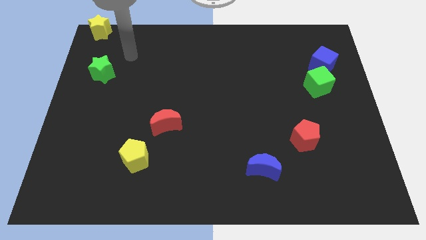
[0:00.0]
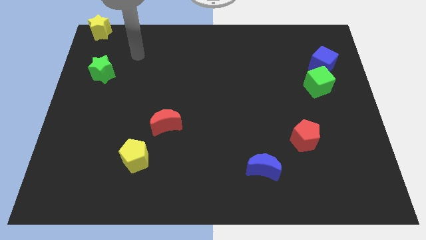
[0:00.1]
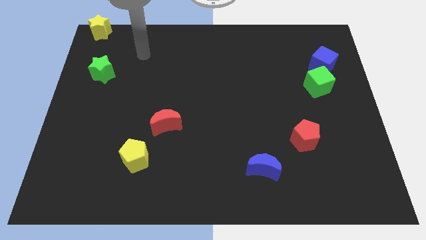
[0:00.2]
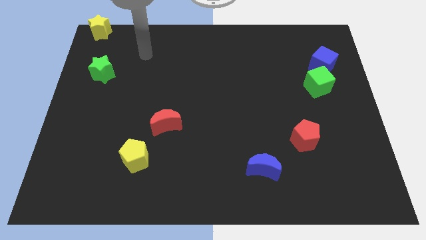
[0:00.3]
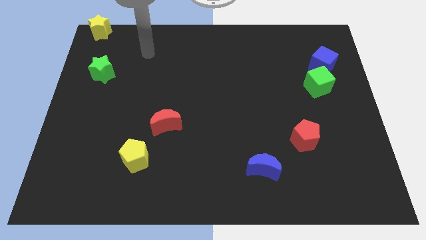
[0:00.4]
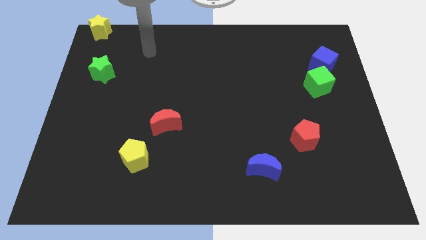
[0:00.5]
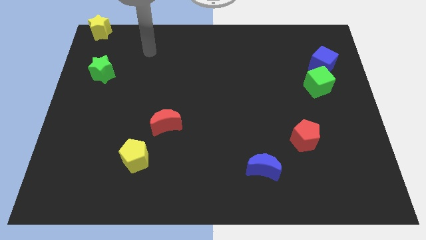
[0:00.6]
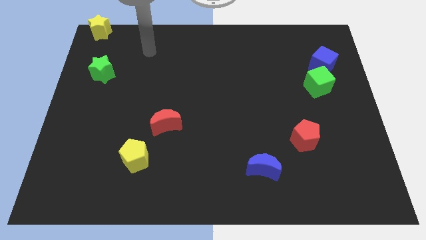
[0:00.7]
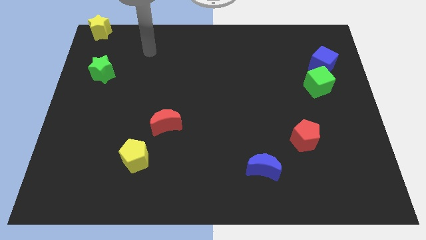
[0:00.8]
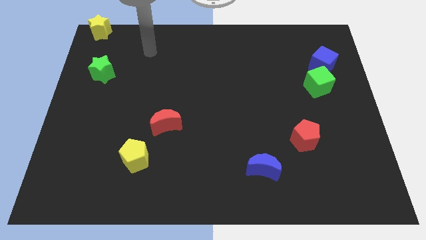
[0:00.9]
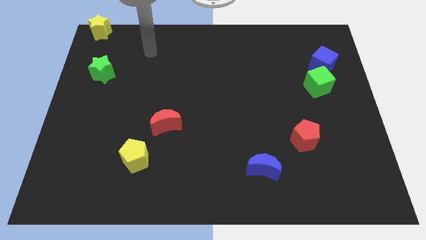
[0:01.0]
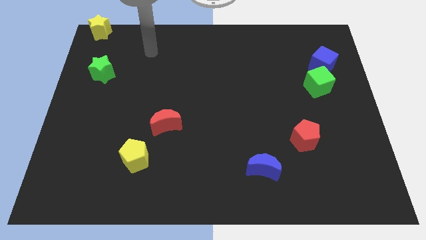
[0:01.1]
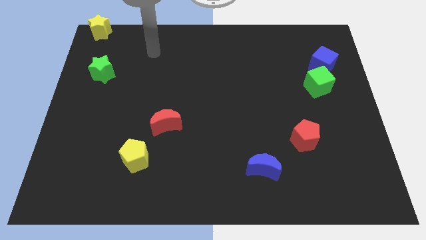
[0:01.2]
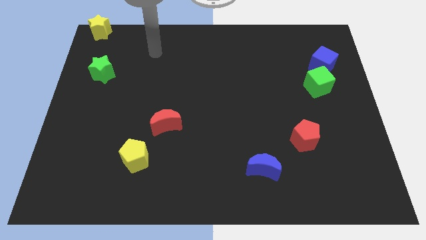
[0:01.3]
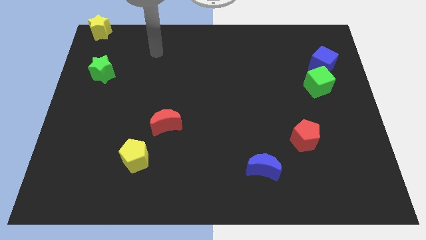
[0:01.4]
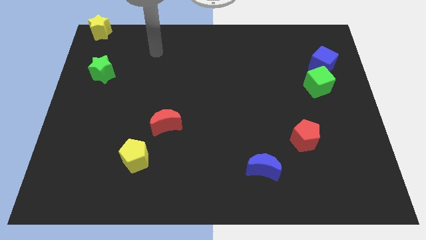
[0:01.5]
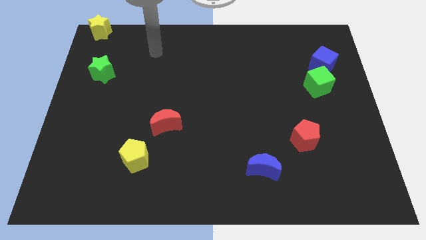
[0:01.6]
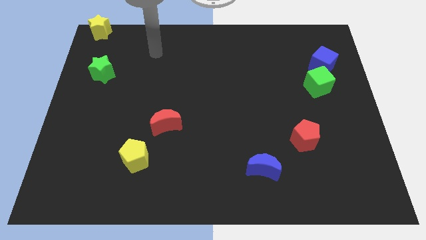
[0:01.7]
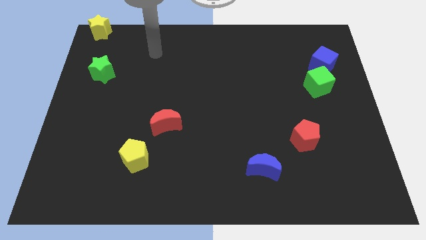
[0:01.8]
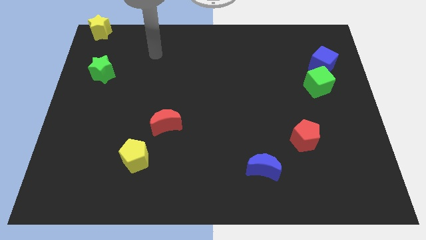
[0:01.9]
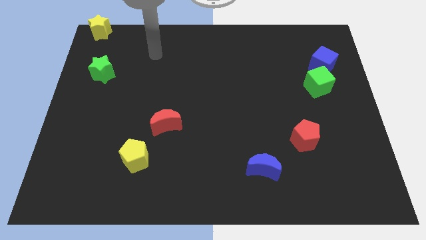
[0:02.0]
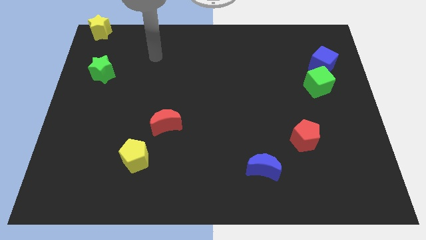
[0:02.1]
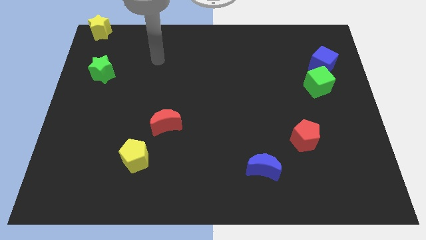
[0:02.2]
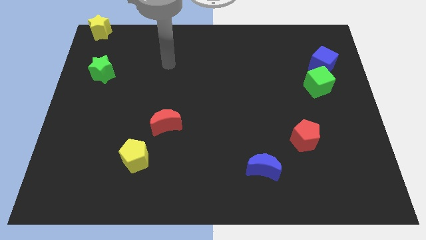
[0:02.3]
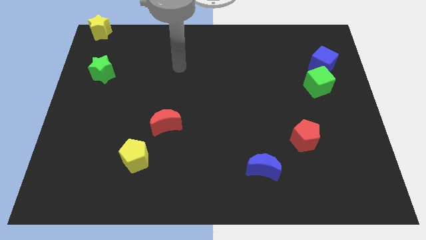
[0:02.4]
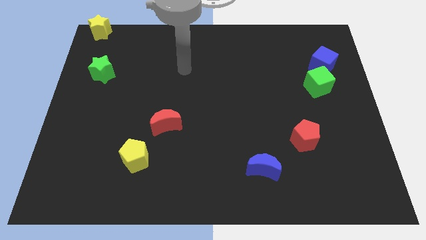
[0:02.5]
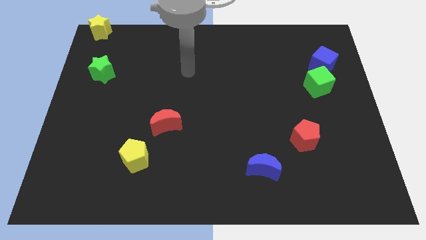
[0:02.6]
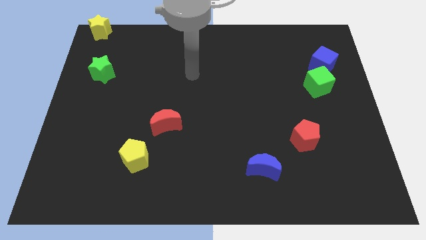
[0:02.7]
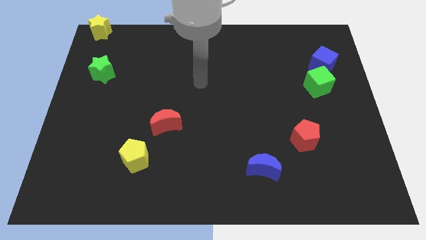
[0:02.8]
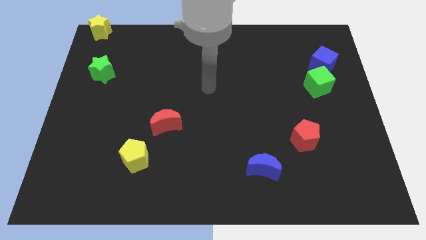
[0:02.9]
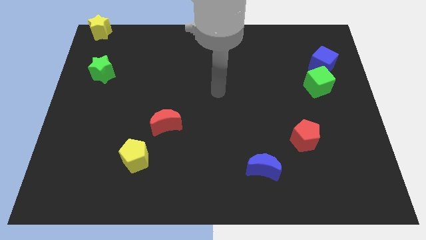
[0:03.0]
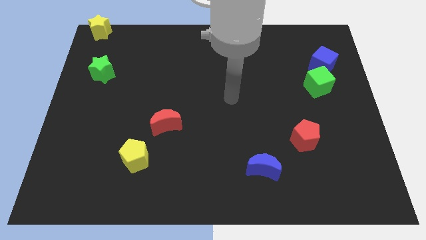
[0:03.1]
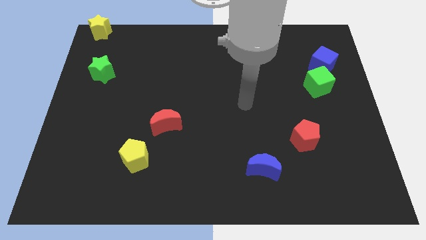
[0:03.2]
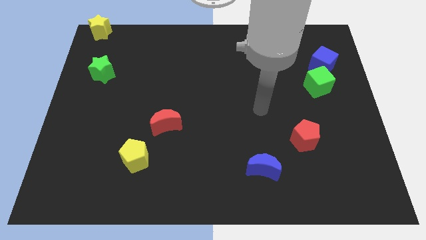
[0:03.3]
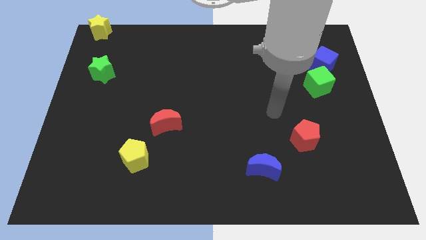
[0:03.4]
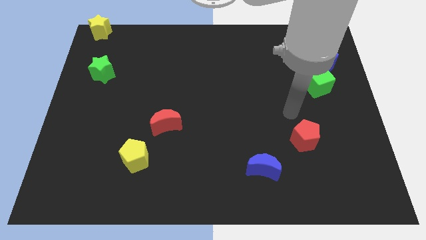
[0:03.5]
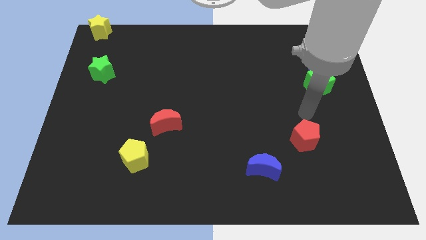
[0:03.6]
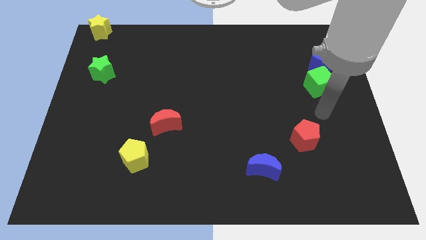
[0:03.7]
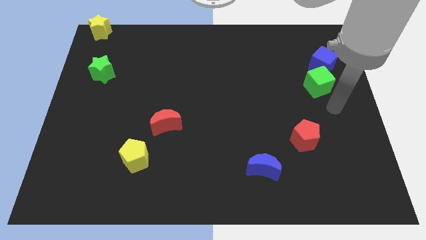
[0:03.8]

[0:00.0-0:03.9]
move the arm towards the green cube

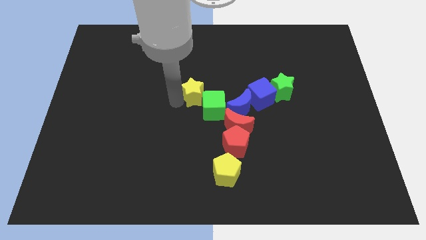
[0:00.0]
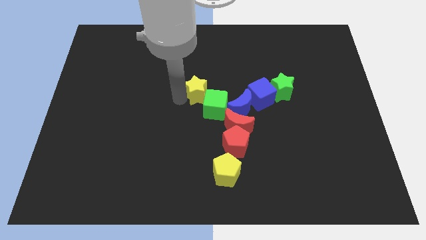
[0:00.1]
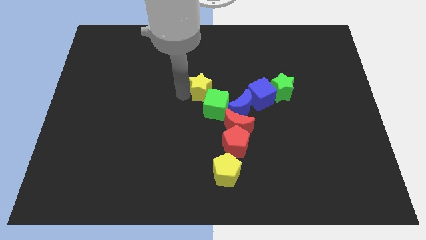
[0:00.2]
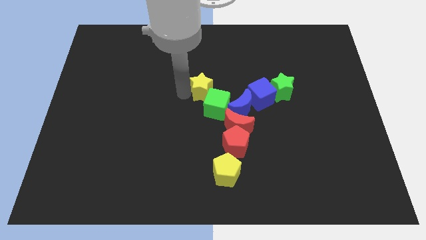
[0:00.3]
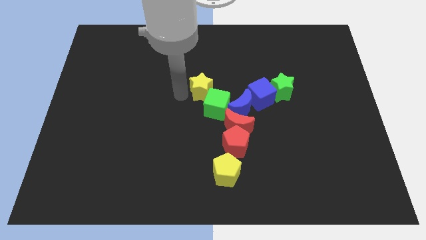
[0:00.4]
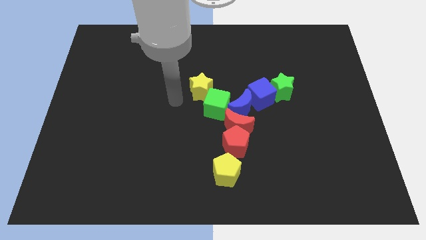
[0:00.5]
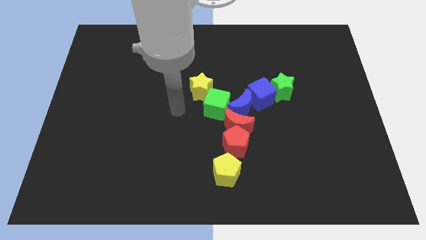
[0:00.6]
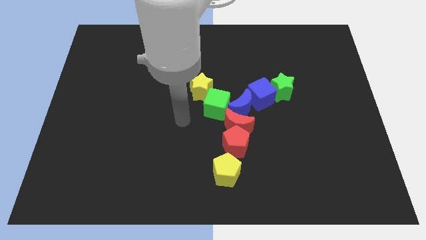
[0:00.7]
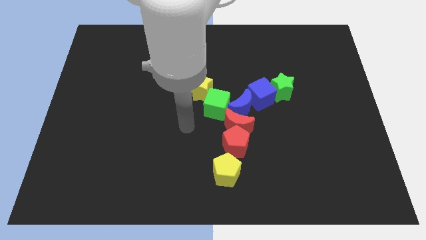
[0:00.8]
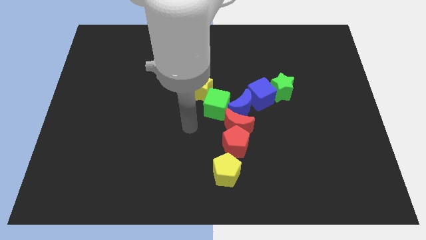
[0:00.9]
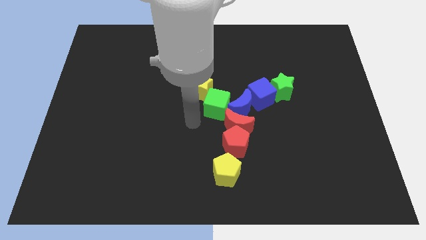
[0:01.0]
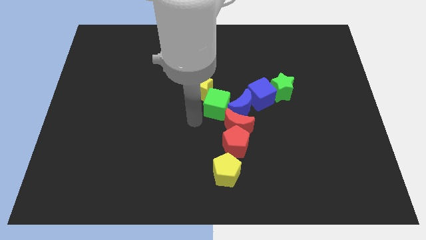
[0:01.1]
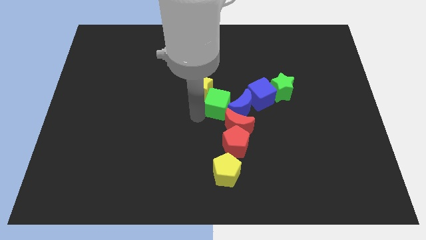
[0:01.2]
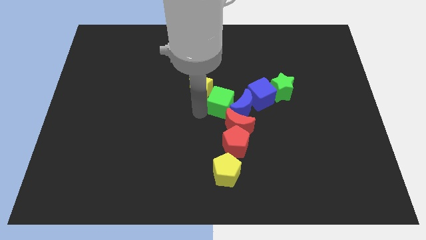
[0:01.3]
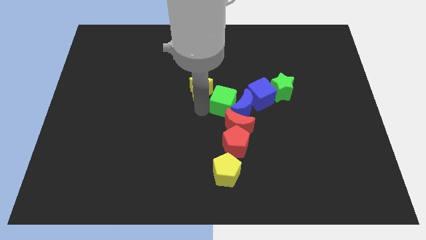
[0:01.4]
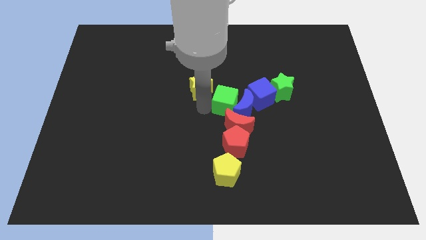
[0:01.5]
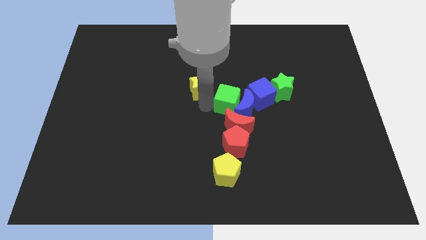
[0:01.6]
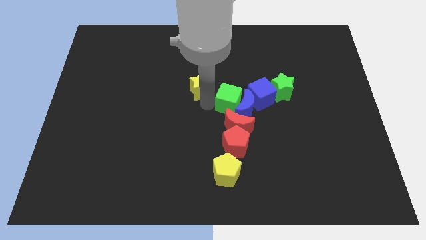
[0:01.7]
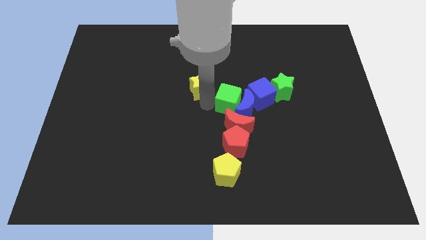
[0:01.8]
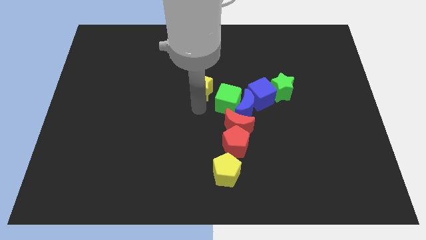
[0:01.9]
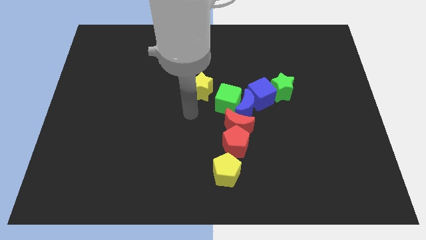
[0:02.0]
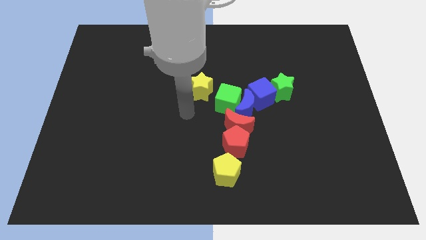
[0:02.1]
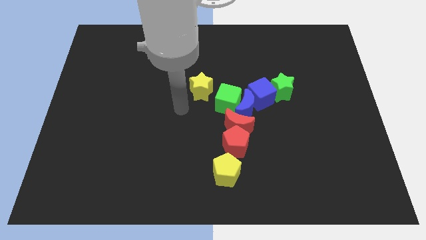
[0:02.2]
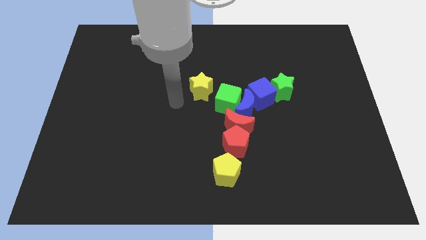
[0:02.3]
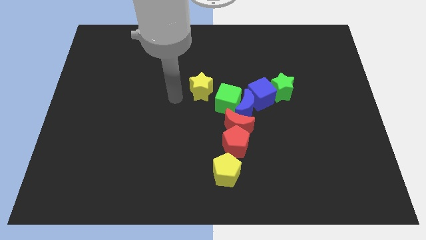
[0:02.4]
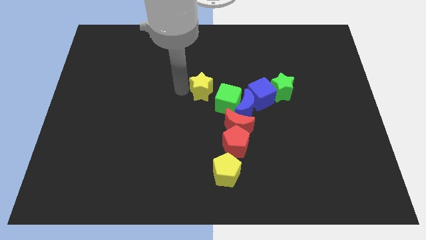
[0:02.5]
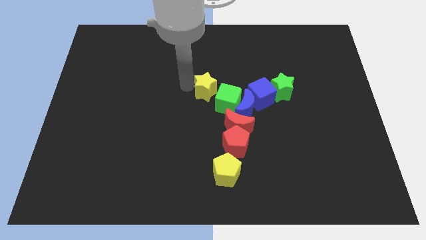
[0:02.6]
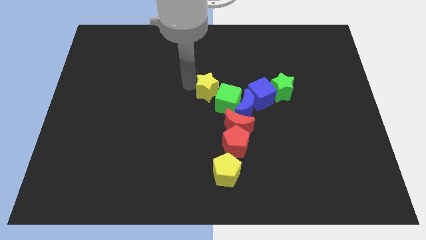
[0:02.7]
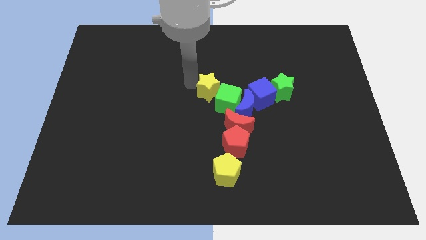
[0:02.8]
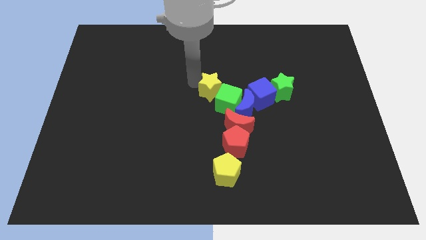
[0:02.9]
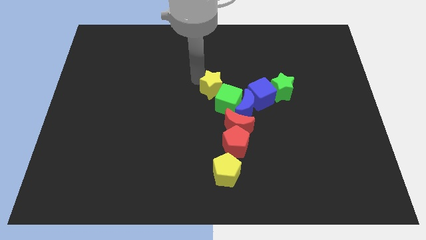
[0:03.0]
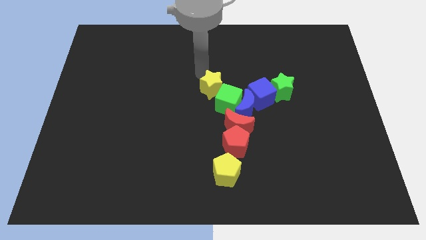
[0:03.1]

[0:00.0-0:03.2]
move yellow star close to green cube

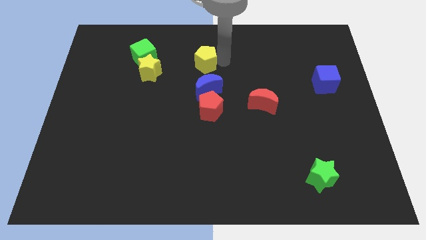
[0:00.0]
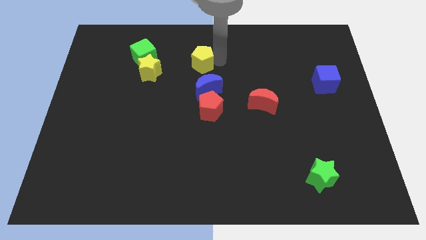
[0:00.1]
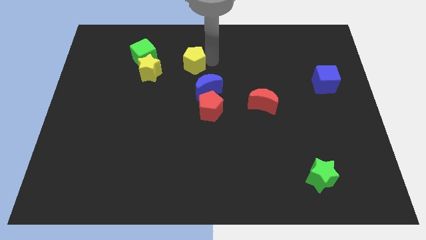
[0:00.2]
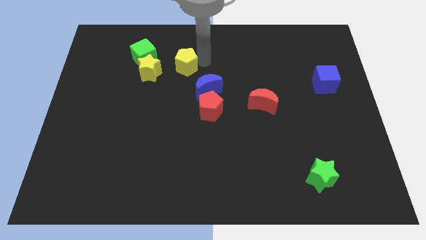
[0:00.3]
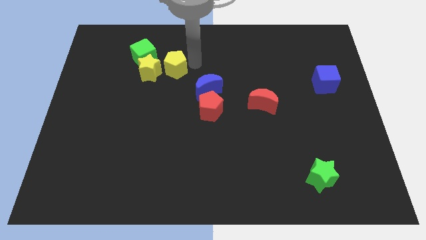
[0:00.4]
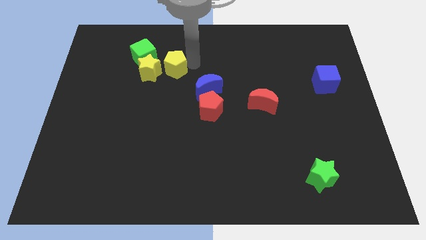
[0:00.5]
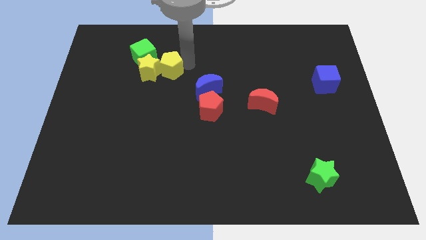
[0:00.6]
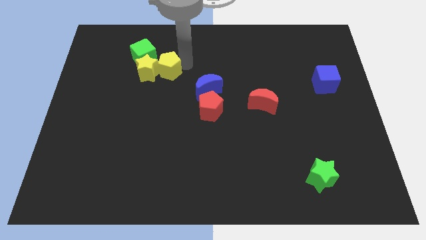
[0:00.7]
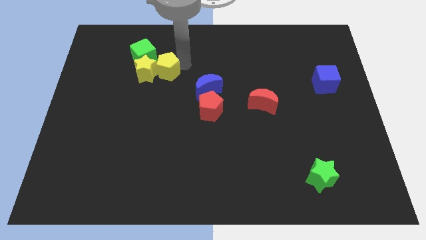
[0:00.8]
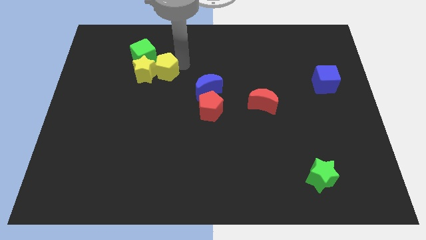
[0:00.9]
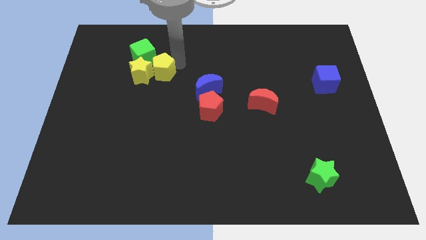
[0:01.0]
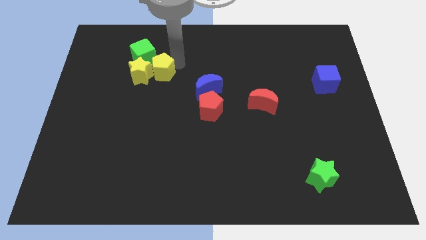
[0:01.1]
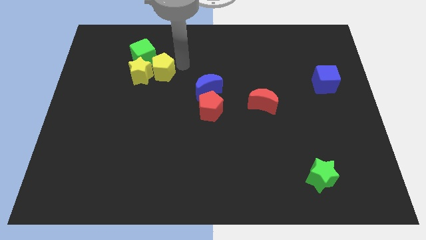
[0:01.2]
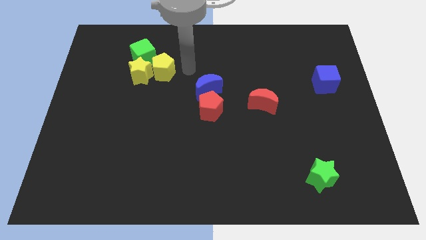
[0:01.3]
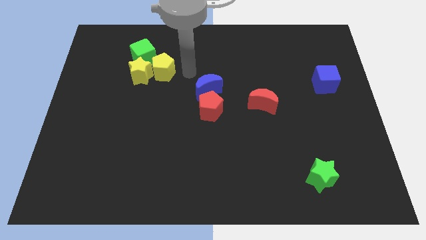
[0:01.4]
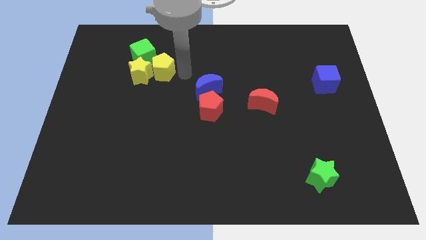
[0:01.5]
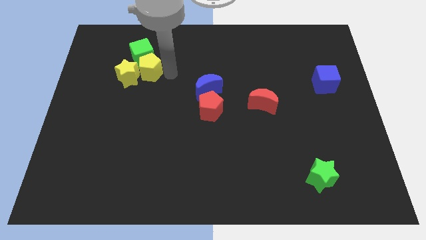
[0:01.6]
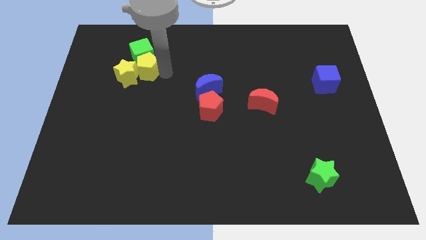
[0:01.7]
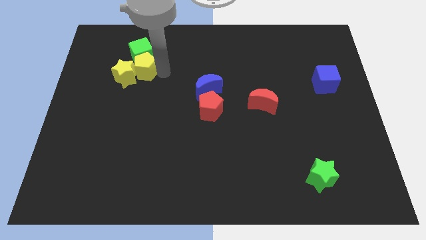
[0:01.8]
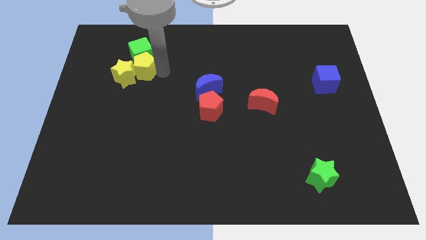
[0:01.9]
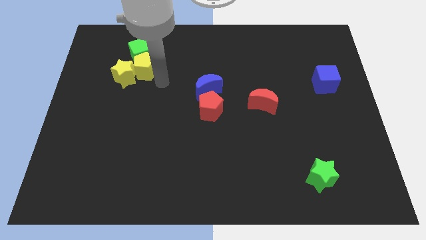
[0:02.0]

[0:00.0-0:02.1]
place yellow pentagon to the bottom of the green cube
